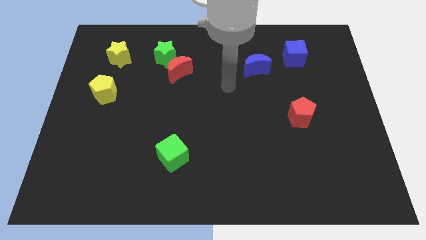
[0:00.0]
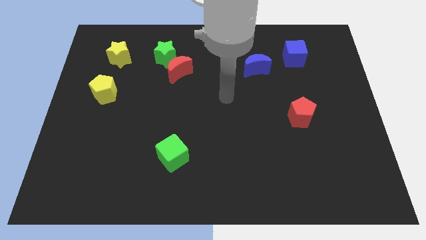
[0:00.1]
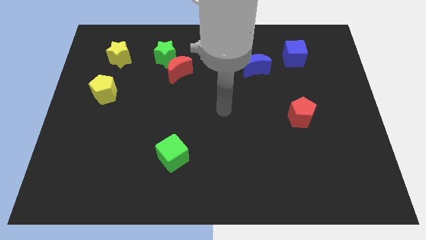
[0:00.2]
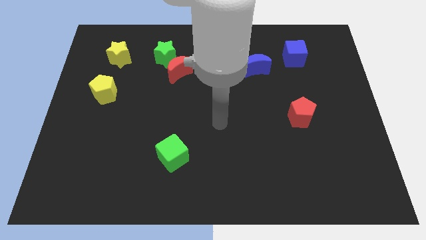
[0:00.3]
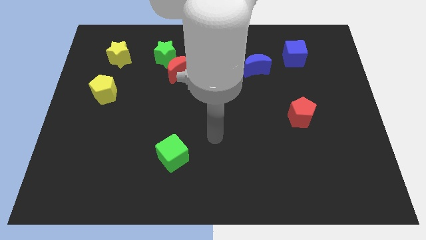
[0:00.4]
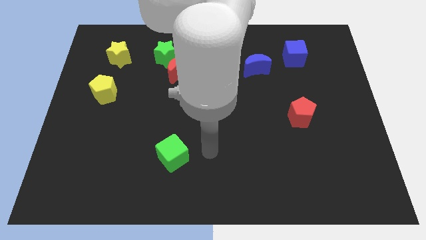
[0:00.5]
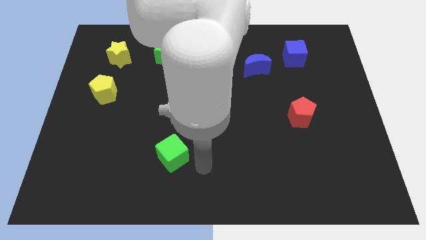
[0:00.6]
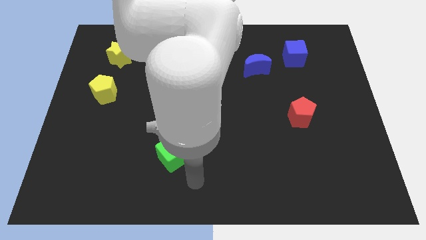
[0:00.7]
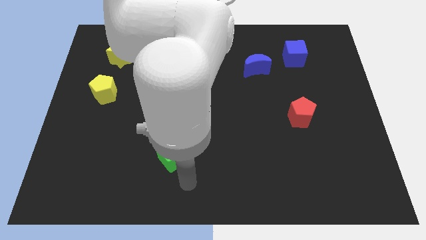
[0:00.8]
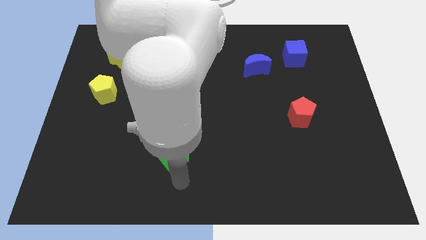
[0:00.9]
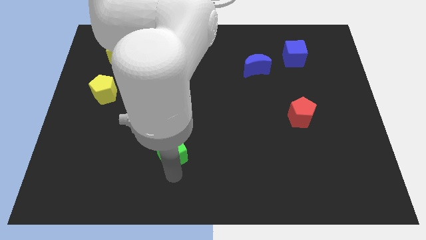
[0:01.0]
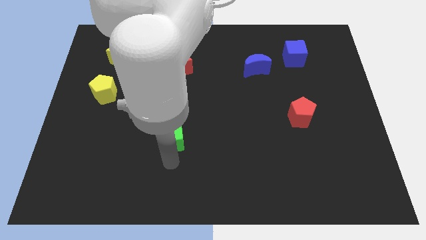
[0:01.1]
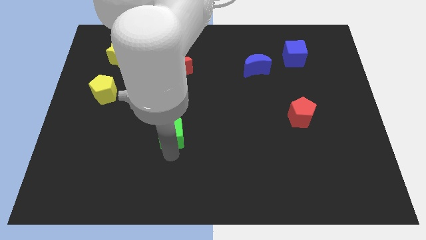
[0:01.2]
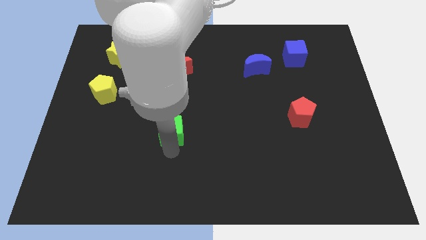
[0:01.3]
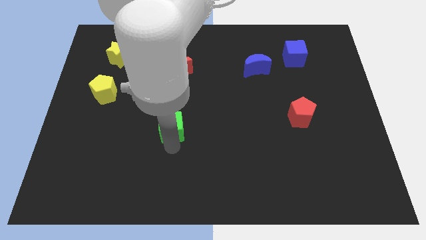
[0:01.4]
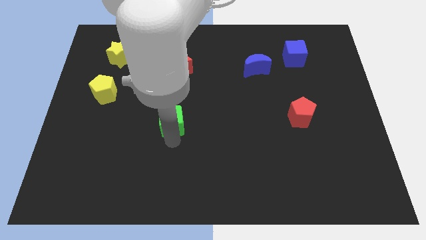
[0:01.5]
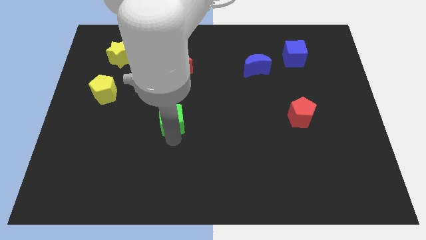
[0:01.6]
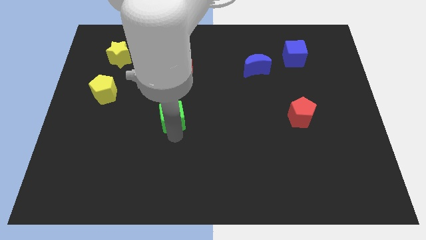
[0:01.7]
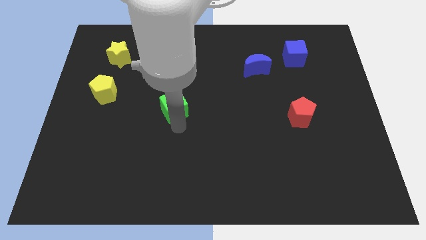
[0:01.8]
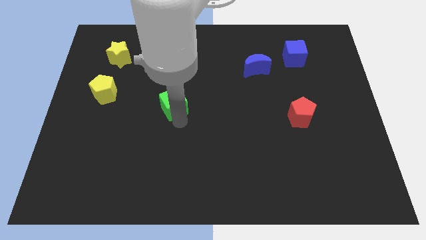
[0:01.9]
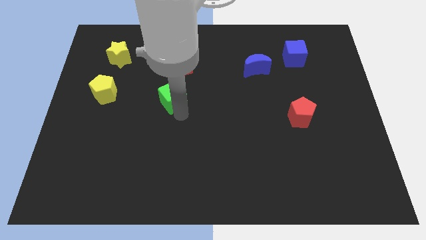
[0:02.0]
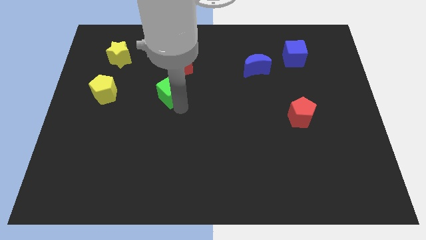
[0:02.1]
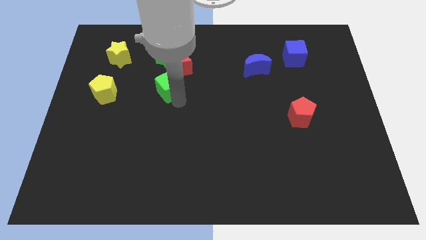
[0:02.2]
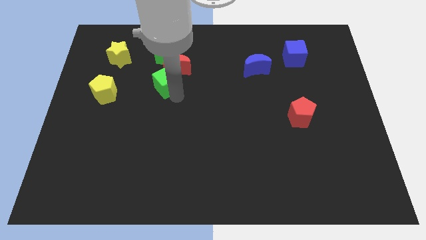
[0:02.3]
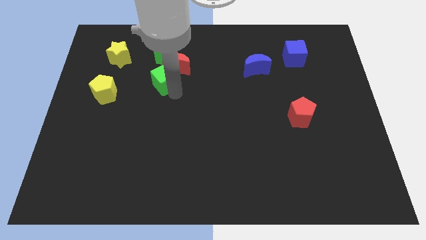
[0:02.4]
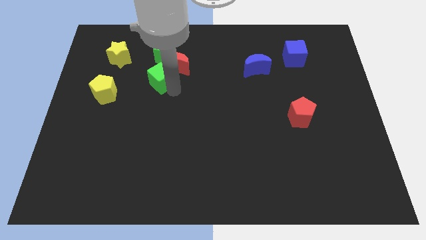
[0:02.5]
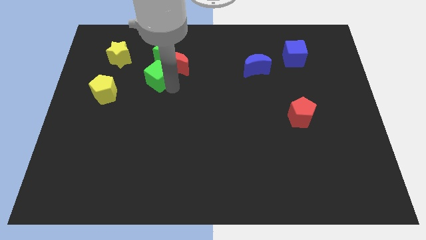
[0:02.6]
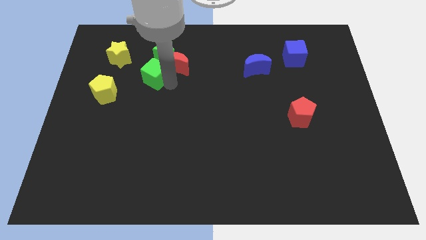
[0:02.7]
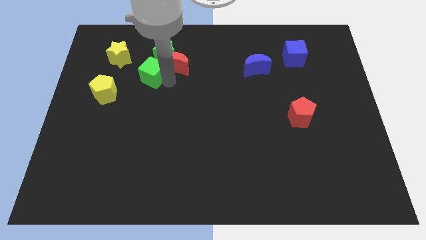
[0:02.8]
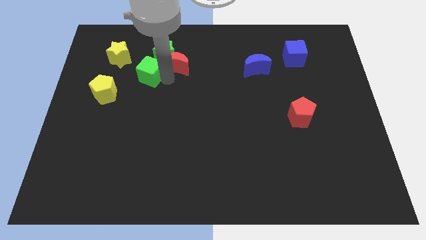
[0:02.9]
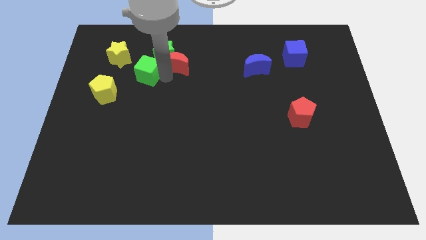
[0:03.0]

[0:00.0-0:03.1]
move the green cube to the bottom left of the green star

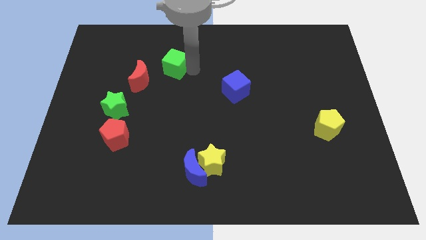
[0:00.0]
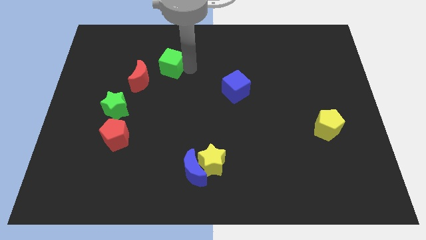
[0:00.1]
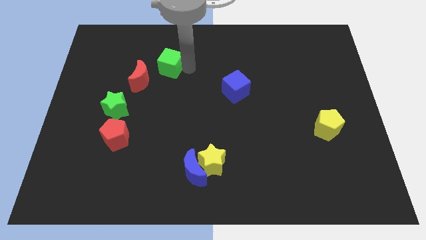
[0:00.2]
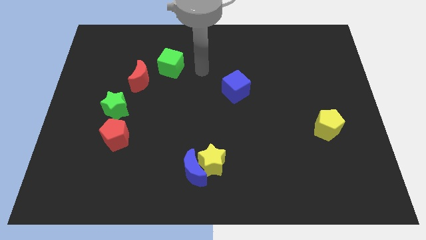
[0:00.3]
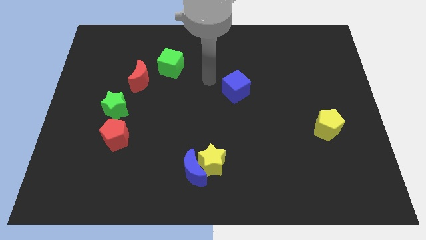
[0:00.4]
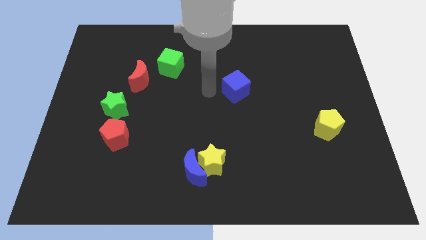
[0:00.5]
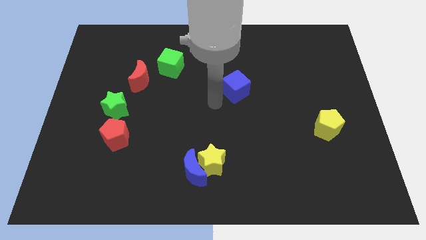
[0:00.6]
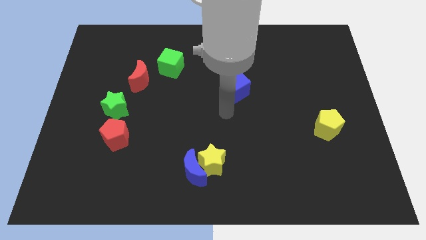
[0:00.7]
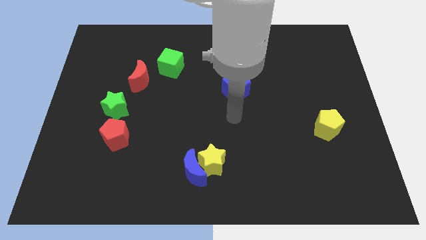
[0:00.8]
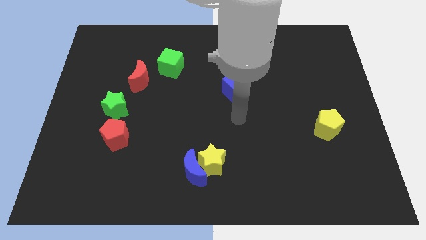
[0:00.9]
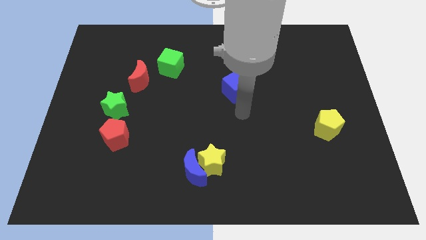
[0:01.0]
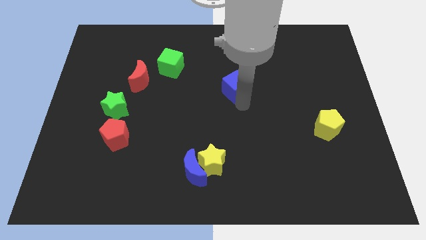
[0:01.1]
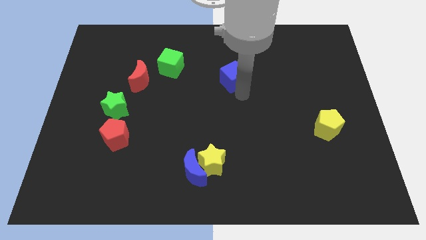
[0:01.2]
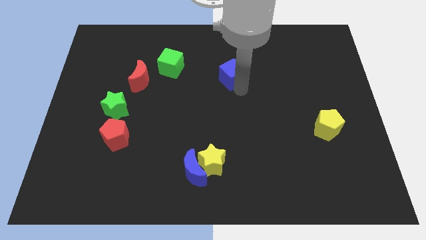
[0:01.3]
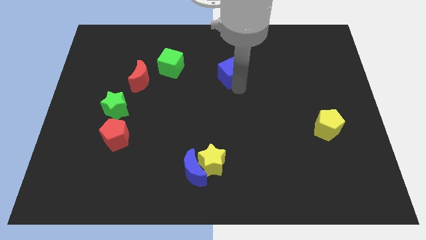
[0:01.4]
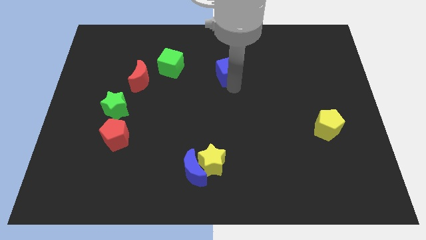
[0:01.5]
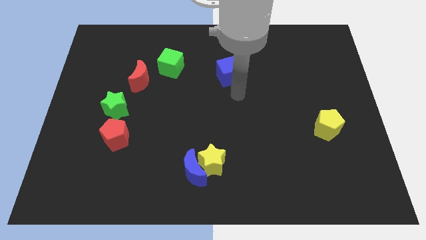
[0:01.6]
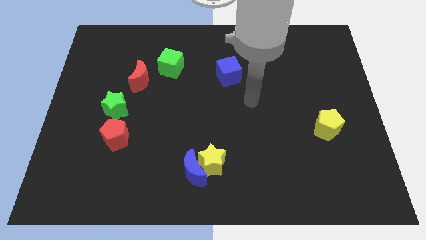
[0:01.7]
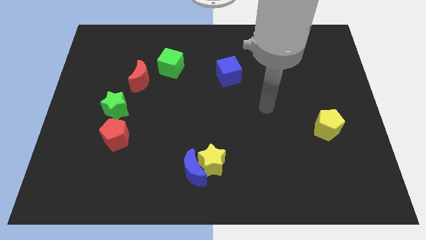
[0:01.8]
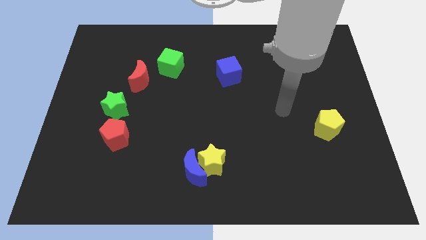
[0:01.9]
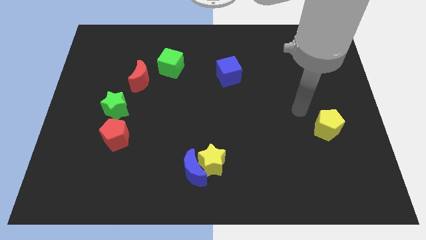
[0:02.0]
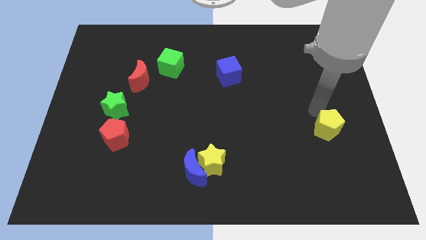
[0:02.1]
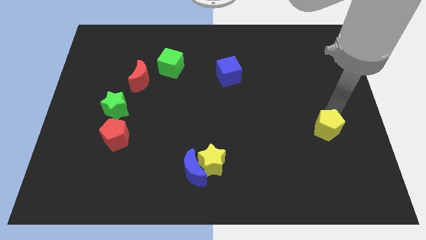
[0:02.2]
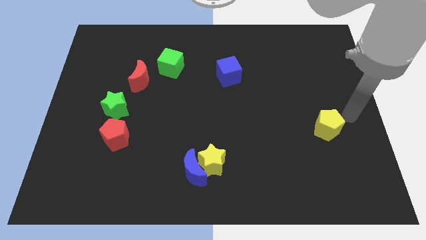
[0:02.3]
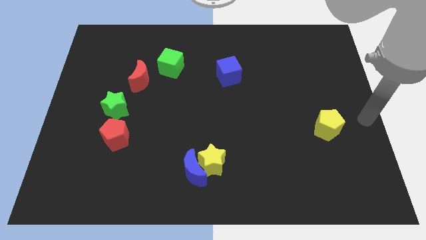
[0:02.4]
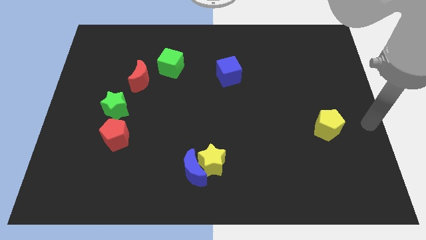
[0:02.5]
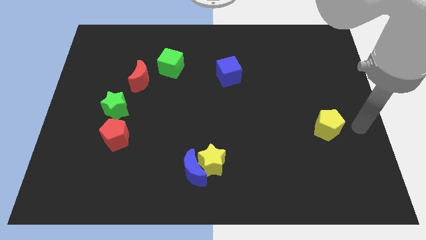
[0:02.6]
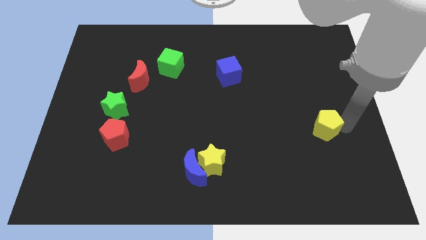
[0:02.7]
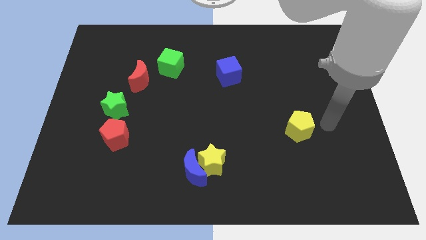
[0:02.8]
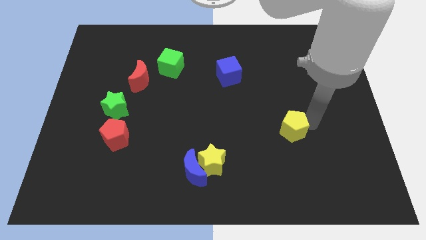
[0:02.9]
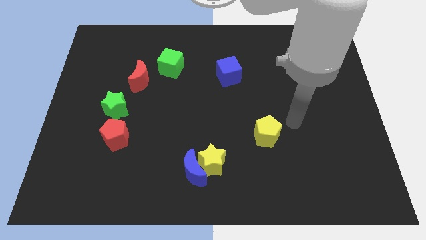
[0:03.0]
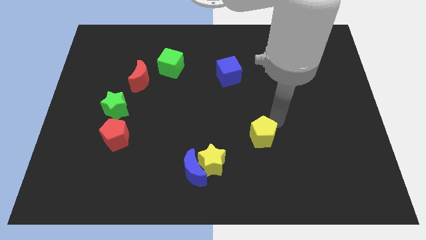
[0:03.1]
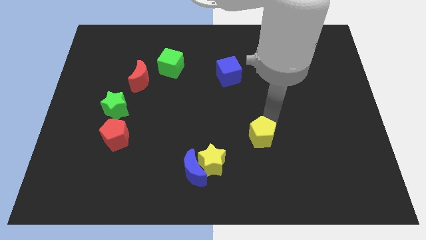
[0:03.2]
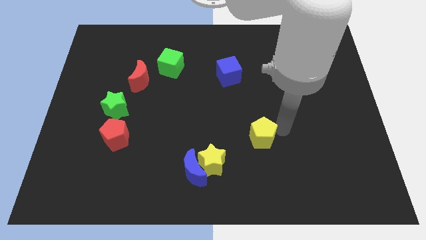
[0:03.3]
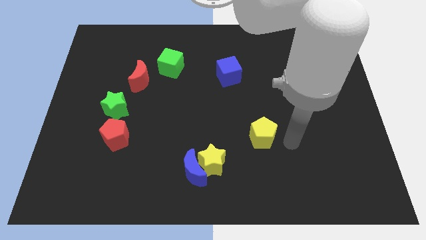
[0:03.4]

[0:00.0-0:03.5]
push yellow pentagon lightly towards left side

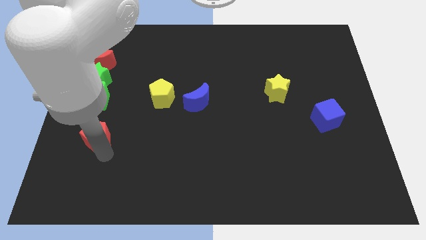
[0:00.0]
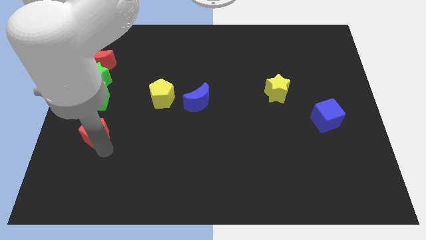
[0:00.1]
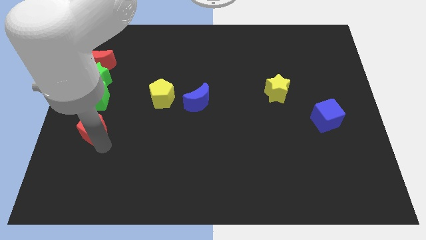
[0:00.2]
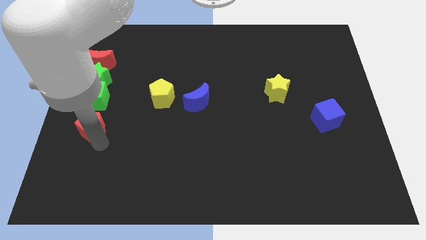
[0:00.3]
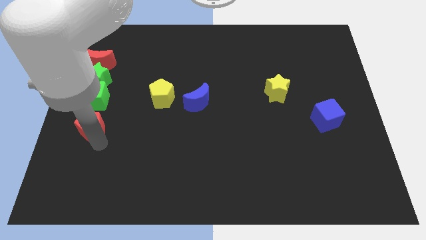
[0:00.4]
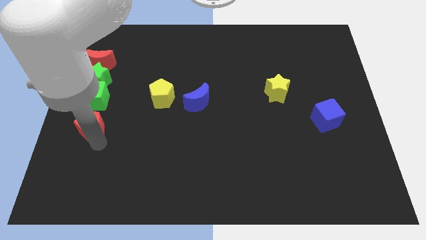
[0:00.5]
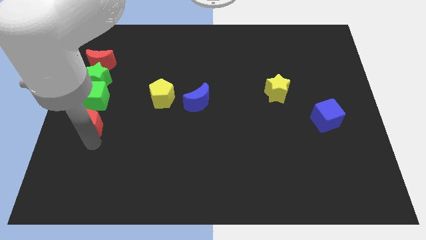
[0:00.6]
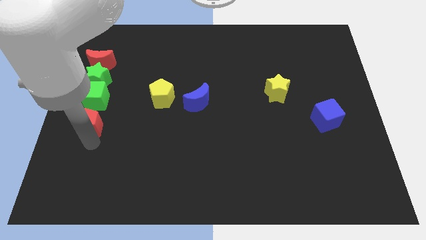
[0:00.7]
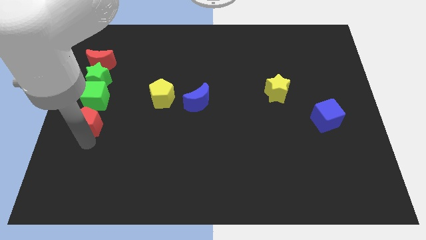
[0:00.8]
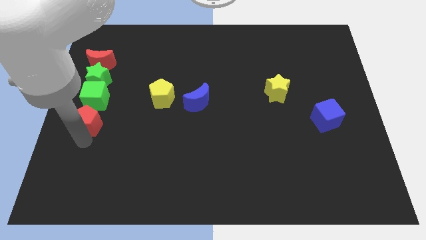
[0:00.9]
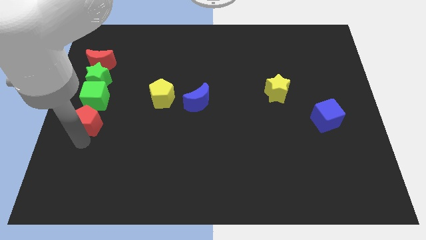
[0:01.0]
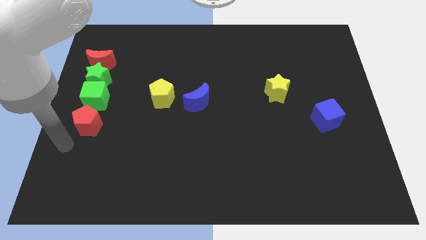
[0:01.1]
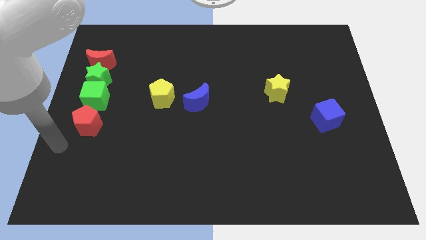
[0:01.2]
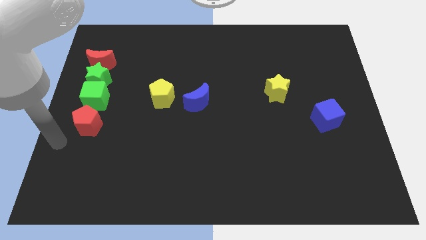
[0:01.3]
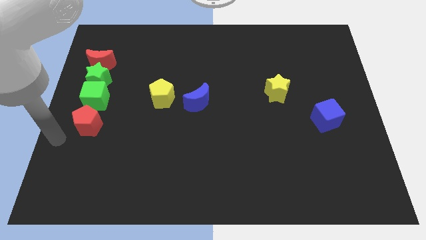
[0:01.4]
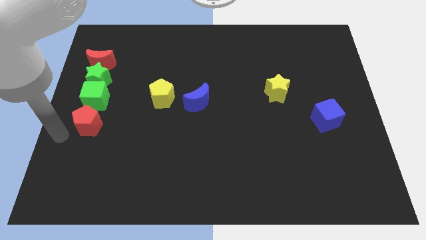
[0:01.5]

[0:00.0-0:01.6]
place the red pentagon below the green cube

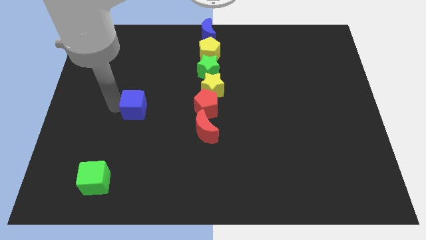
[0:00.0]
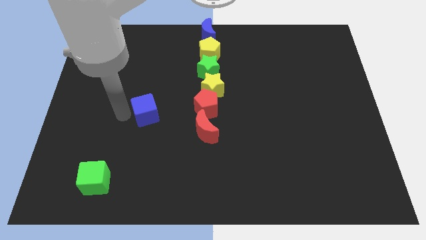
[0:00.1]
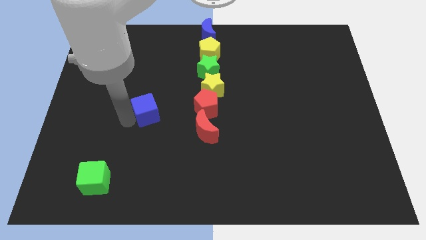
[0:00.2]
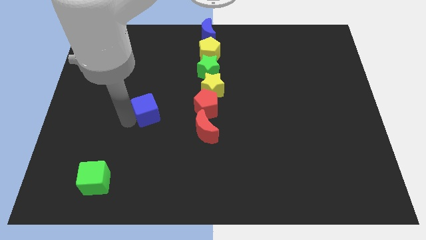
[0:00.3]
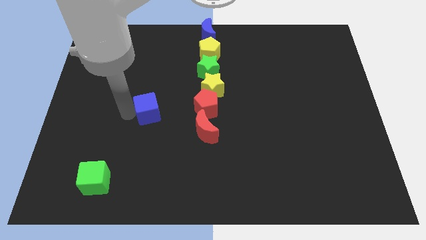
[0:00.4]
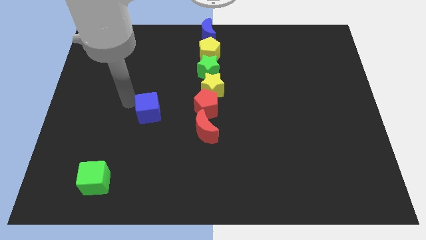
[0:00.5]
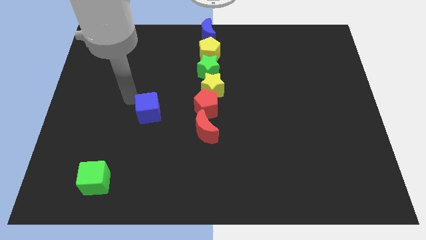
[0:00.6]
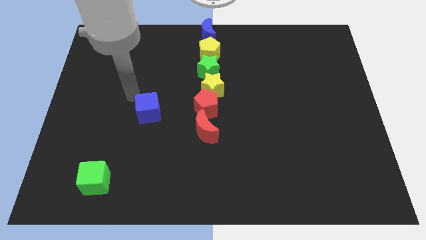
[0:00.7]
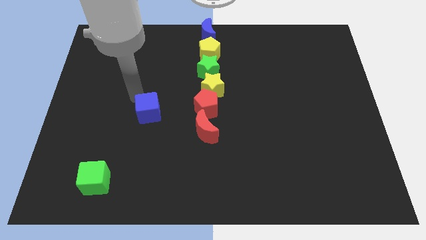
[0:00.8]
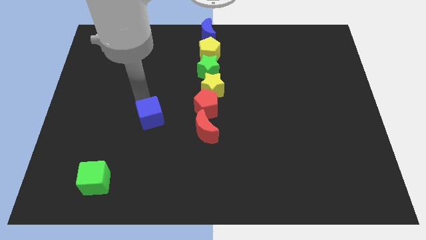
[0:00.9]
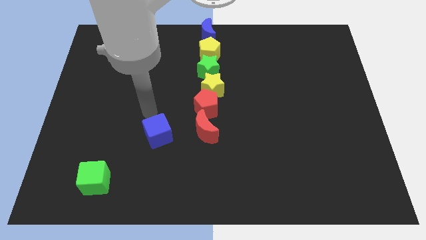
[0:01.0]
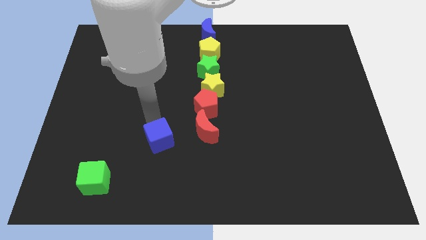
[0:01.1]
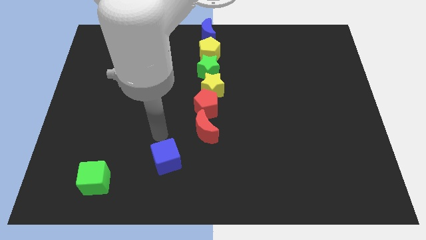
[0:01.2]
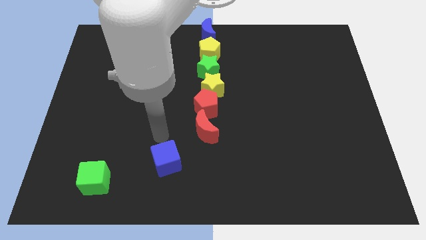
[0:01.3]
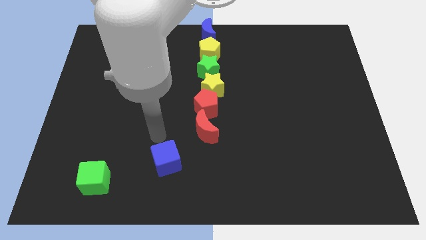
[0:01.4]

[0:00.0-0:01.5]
push the blue cube diagonally to the red crescent
